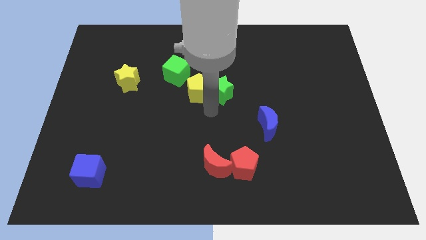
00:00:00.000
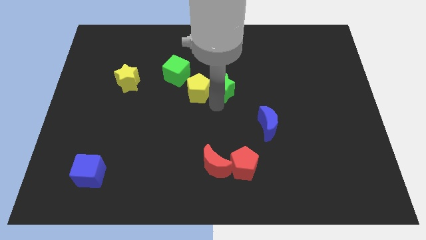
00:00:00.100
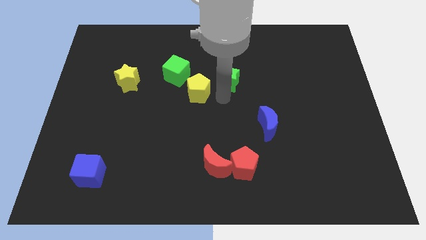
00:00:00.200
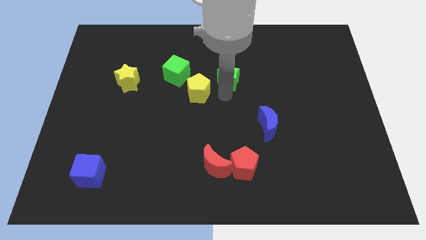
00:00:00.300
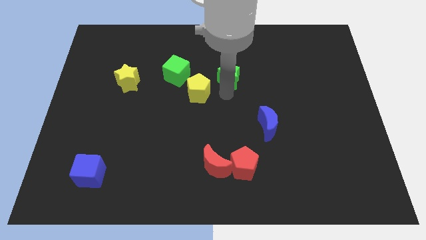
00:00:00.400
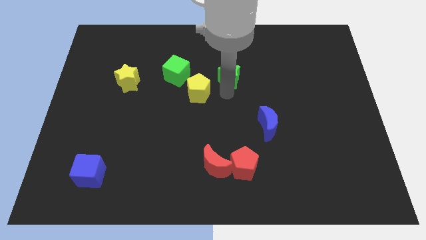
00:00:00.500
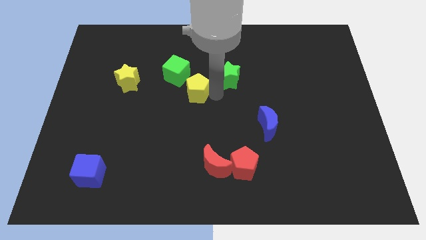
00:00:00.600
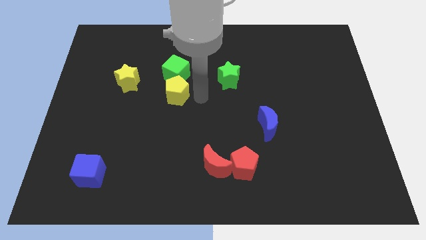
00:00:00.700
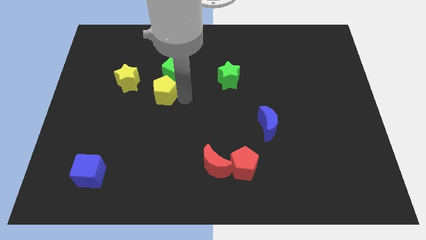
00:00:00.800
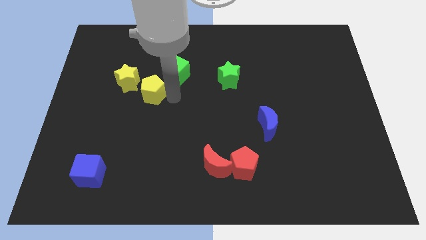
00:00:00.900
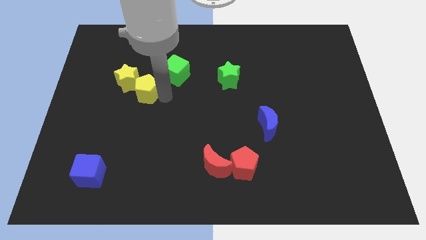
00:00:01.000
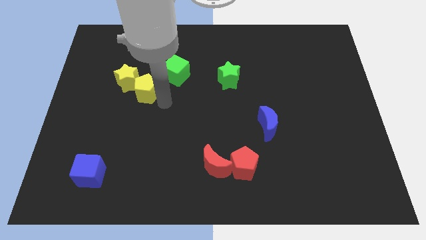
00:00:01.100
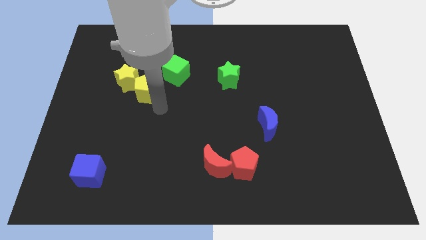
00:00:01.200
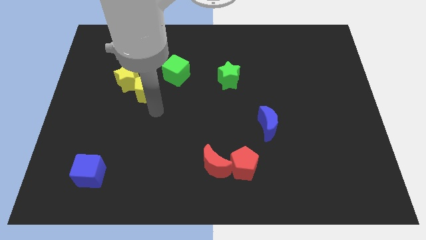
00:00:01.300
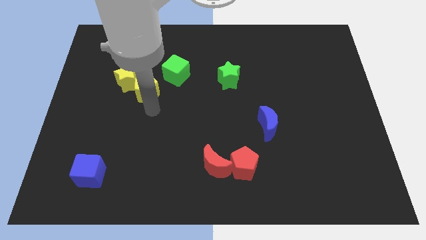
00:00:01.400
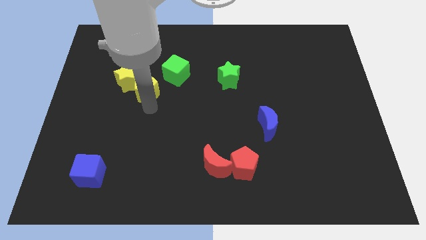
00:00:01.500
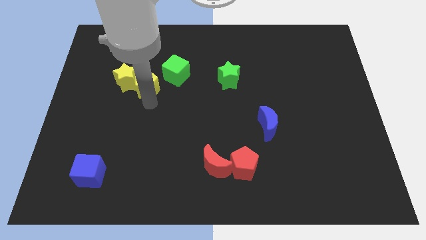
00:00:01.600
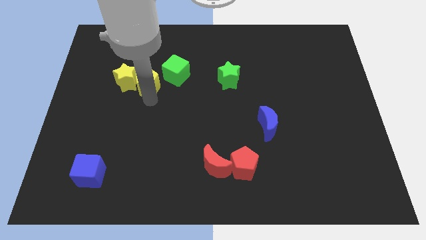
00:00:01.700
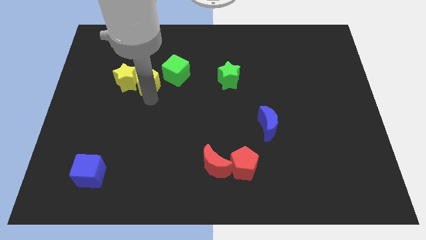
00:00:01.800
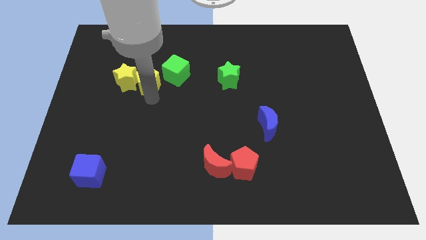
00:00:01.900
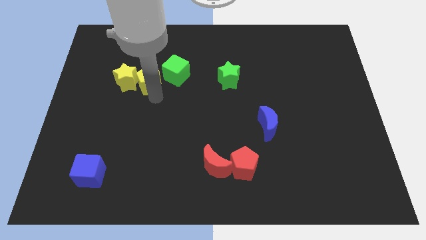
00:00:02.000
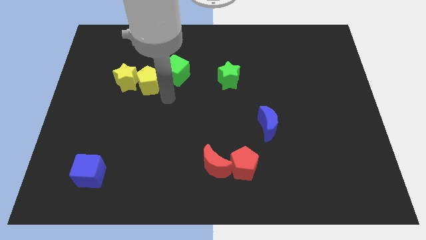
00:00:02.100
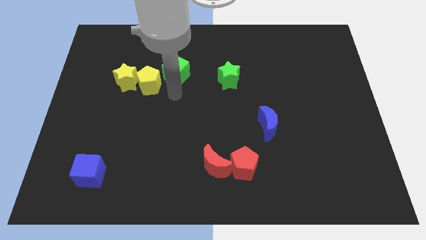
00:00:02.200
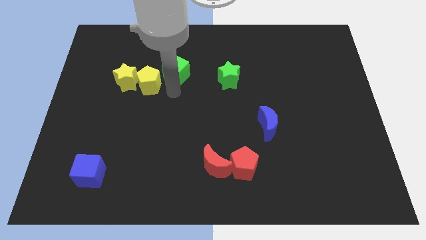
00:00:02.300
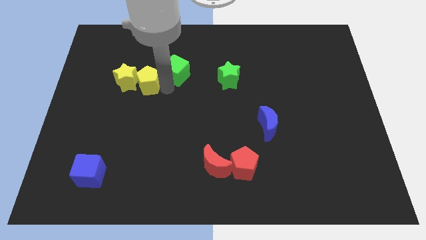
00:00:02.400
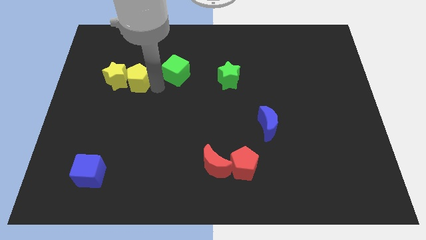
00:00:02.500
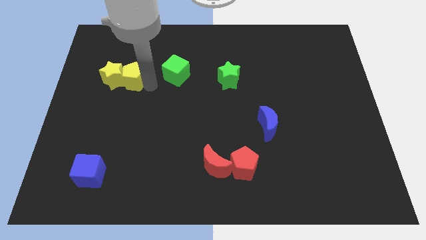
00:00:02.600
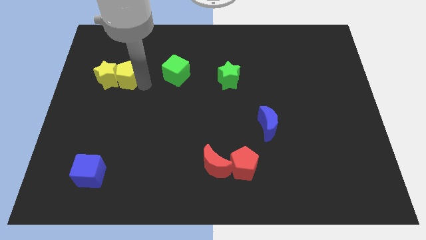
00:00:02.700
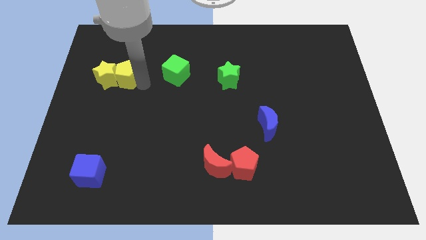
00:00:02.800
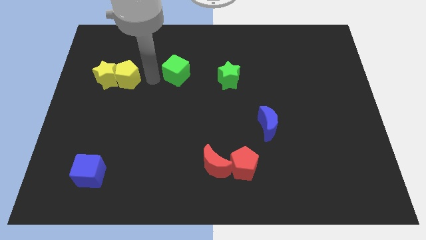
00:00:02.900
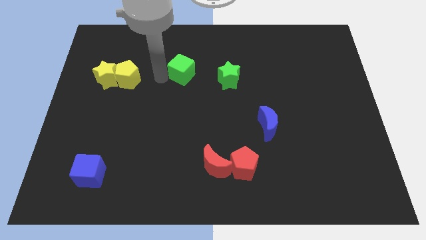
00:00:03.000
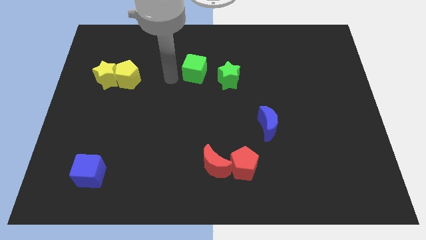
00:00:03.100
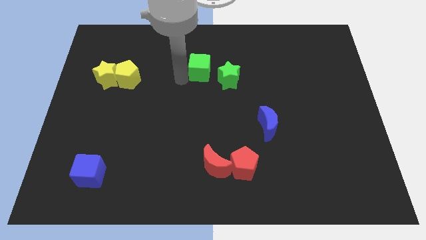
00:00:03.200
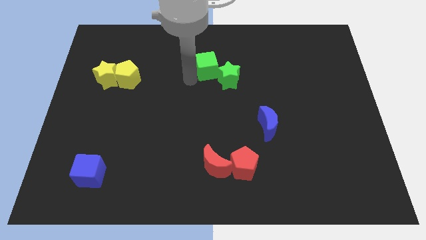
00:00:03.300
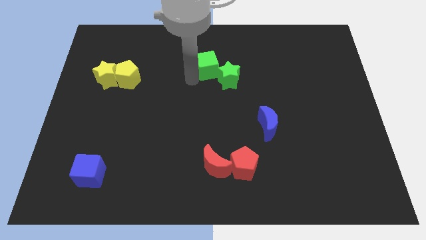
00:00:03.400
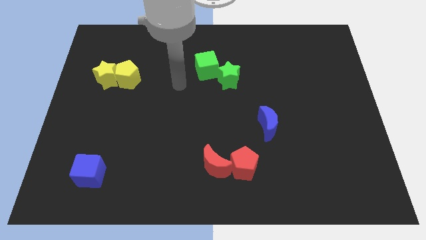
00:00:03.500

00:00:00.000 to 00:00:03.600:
push the yellow pentagon into the yellow star

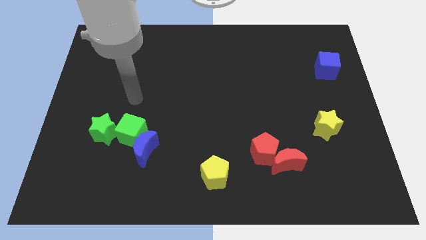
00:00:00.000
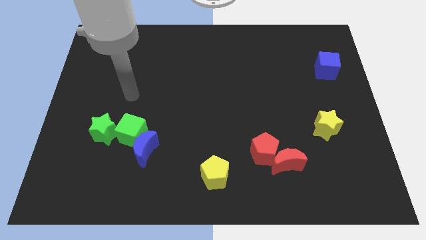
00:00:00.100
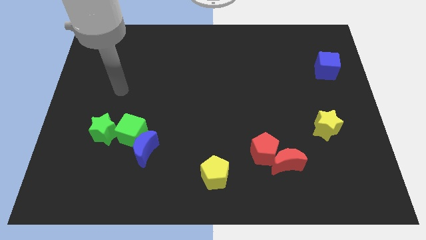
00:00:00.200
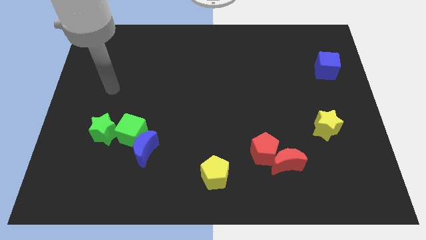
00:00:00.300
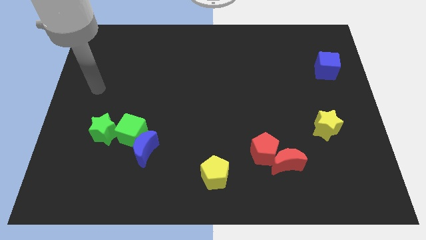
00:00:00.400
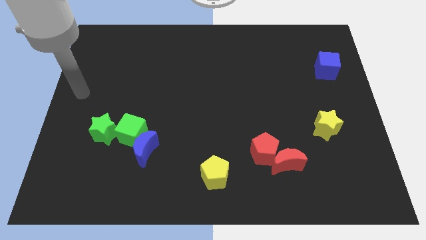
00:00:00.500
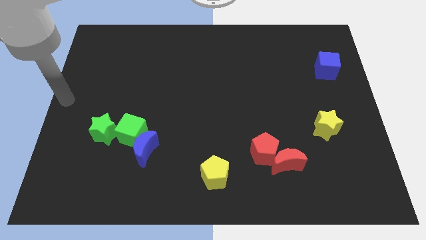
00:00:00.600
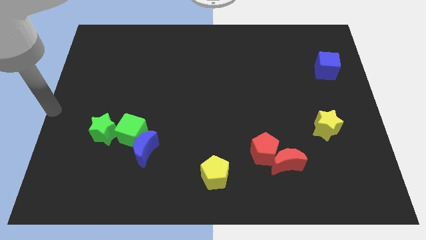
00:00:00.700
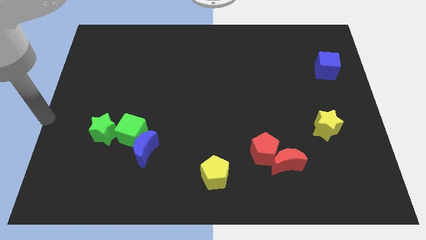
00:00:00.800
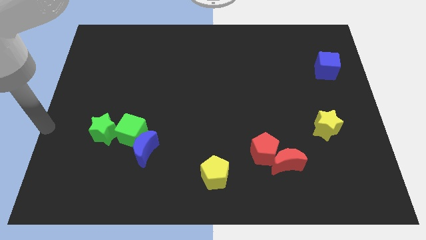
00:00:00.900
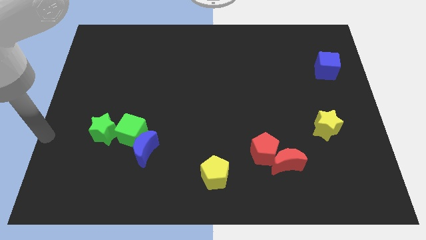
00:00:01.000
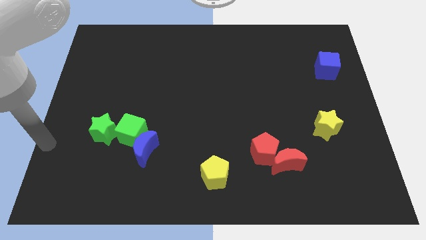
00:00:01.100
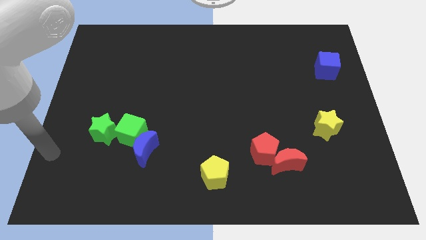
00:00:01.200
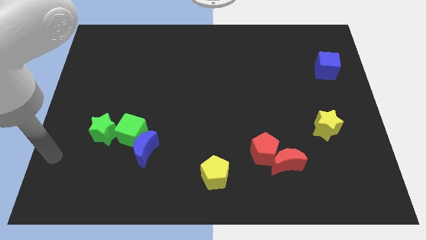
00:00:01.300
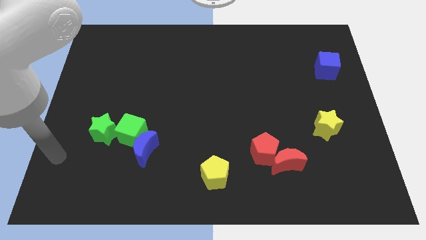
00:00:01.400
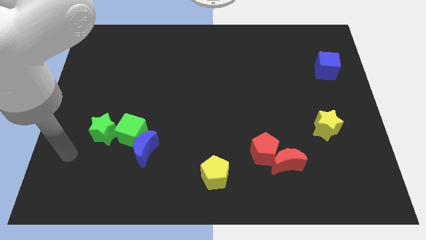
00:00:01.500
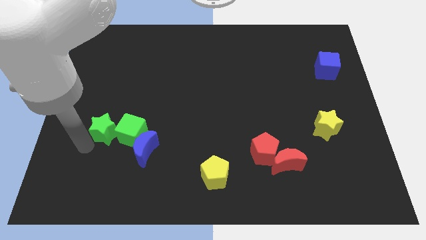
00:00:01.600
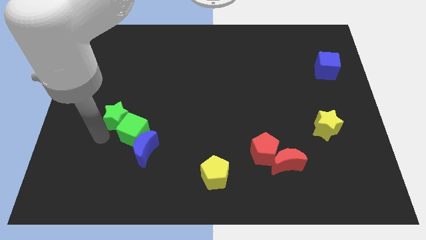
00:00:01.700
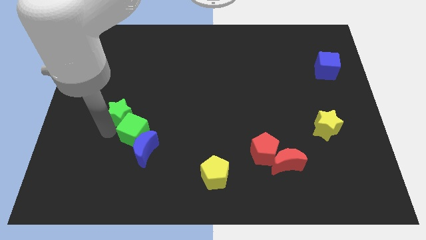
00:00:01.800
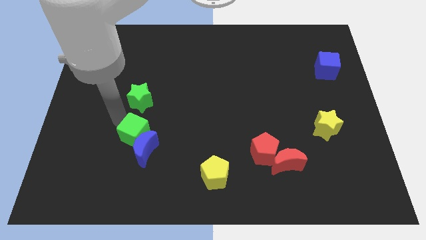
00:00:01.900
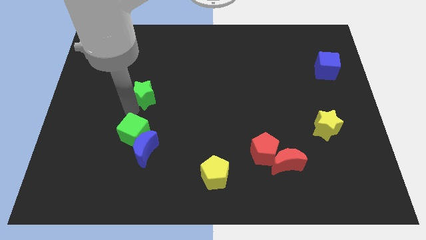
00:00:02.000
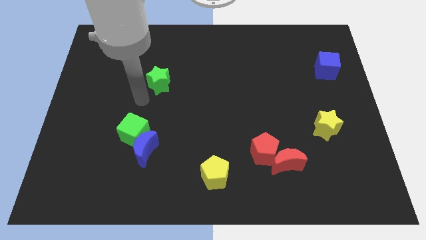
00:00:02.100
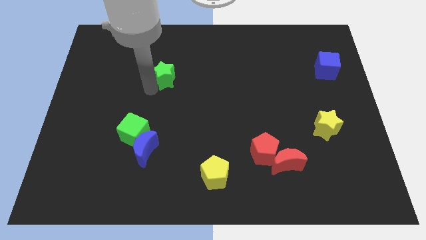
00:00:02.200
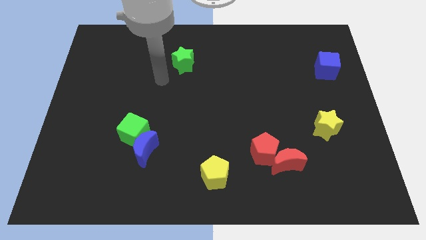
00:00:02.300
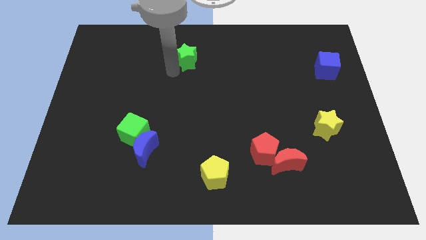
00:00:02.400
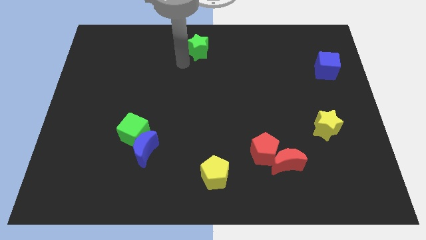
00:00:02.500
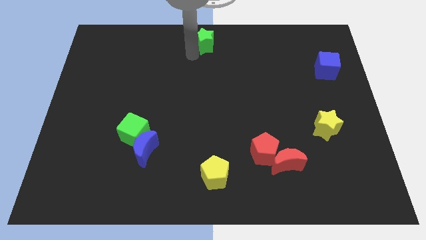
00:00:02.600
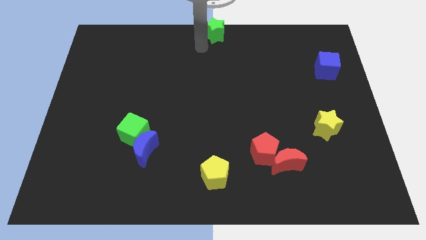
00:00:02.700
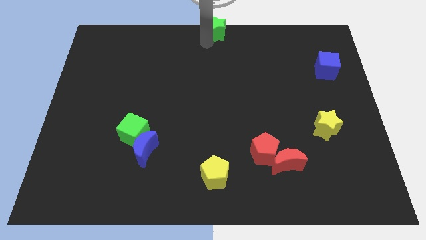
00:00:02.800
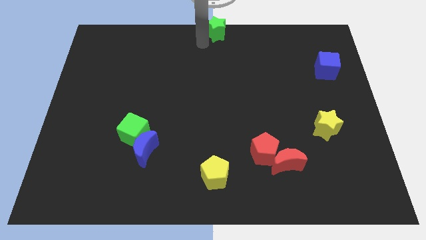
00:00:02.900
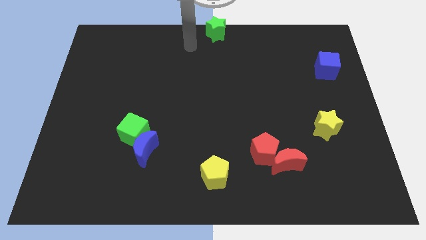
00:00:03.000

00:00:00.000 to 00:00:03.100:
push the green star to the top center of the board

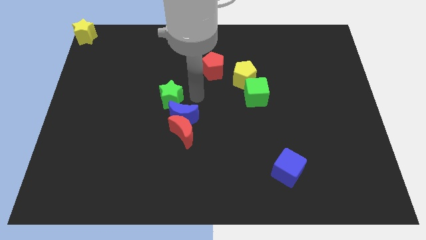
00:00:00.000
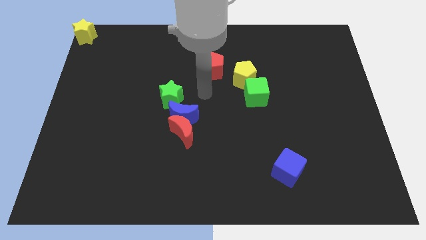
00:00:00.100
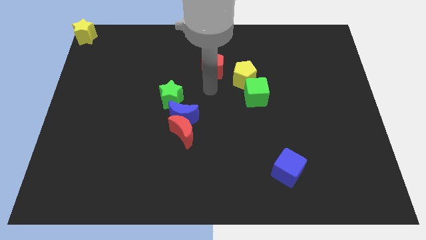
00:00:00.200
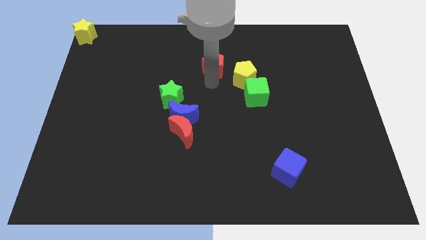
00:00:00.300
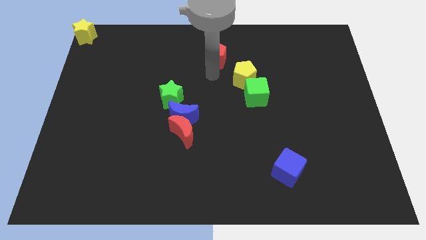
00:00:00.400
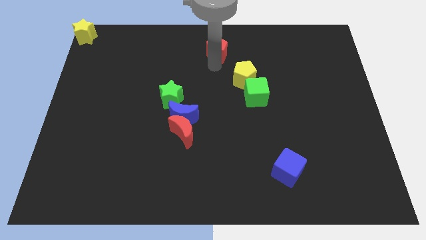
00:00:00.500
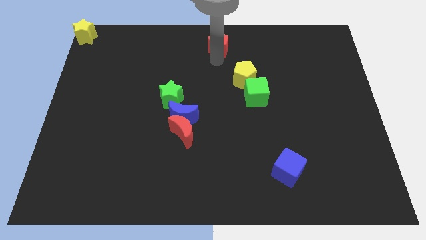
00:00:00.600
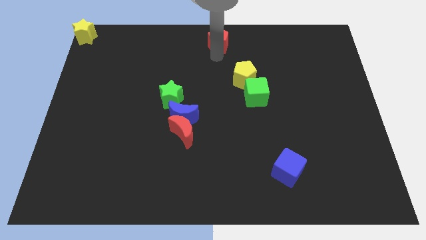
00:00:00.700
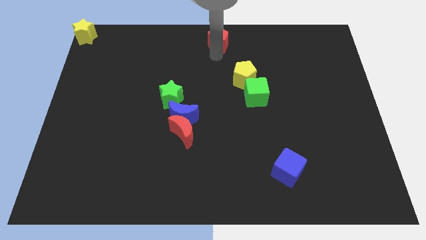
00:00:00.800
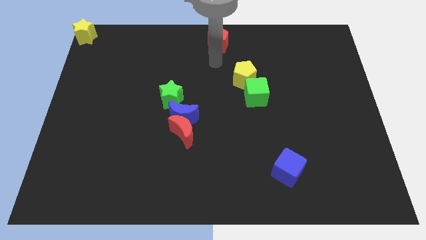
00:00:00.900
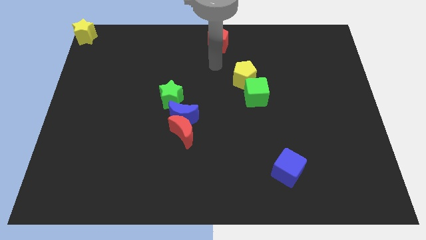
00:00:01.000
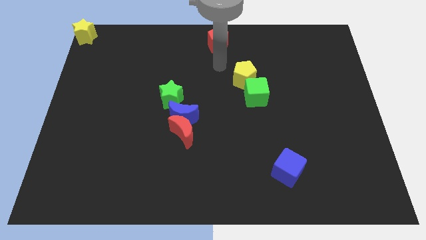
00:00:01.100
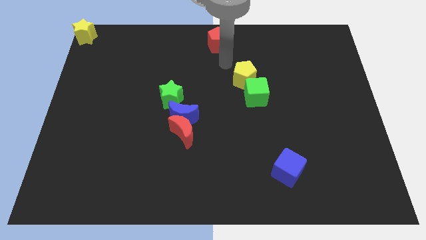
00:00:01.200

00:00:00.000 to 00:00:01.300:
push the red pentagon at the top center of the board

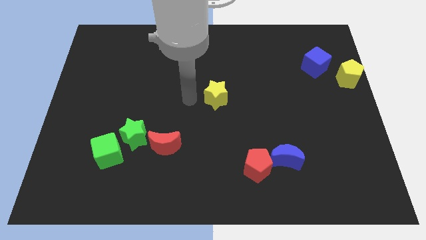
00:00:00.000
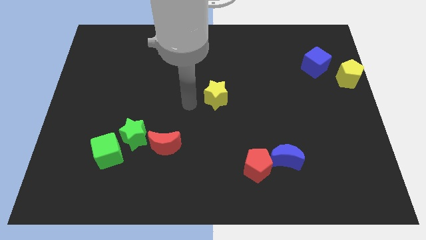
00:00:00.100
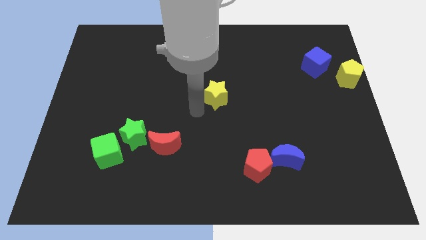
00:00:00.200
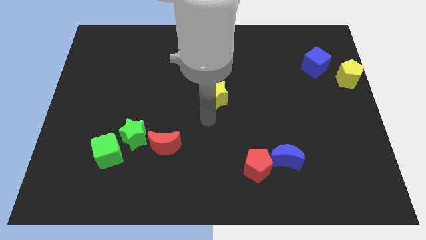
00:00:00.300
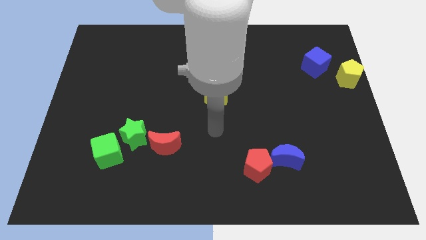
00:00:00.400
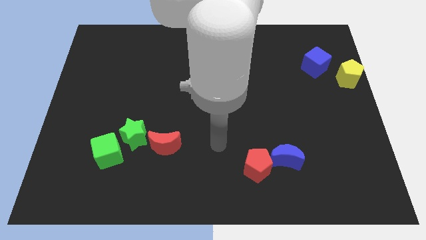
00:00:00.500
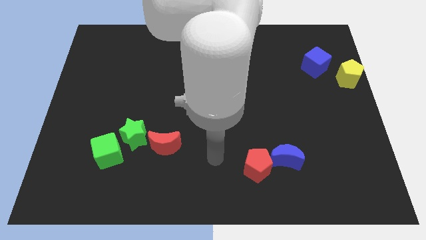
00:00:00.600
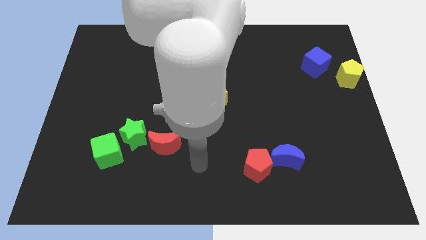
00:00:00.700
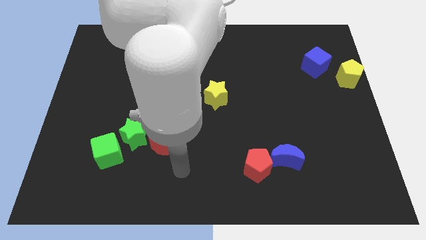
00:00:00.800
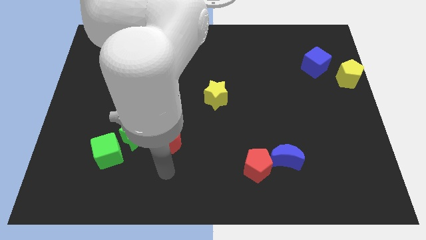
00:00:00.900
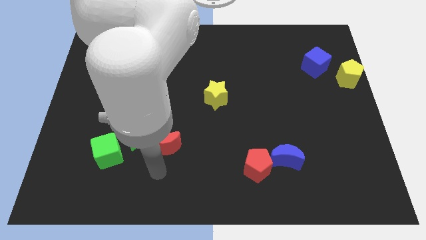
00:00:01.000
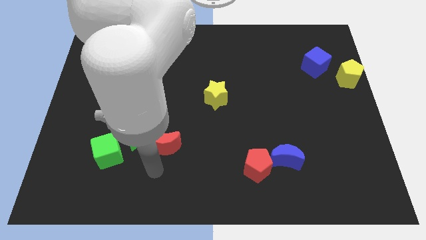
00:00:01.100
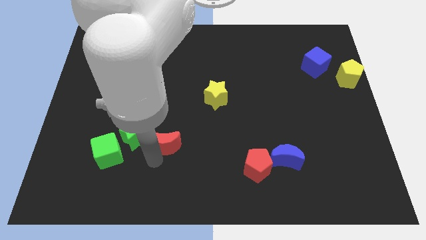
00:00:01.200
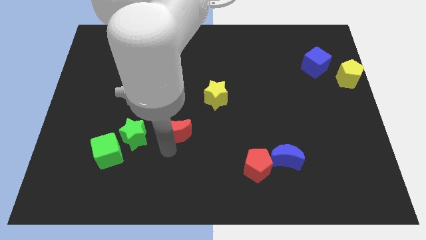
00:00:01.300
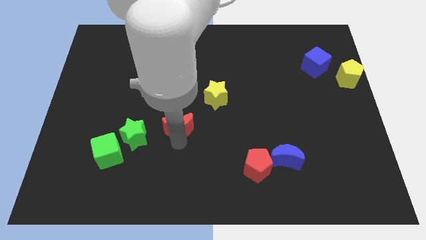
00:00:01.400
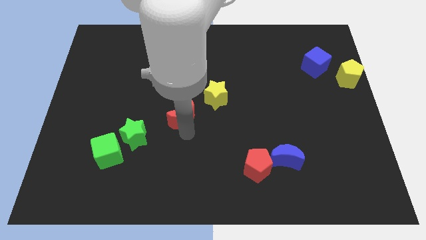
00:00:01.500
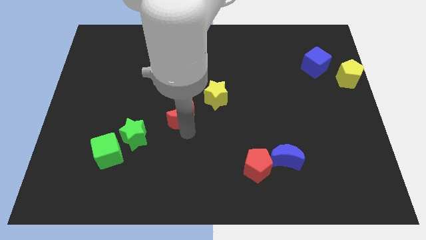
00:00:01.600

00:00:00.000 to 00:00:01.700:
slide the red moon diagonally in between the yellow star and green star
